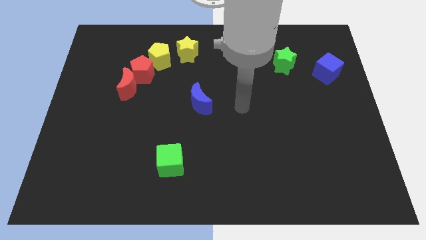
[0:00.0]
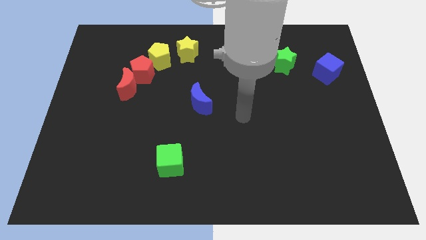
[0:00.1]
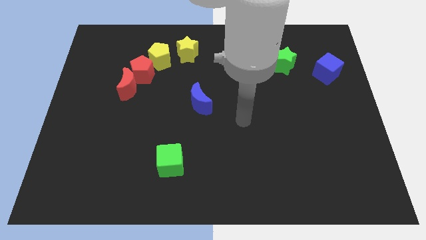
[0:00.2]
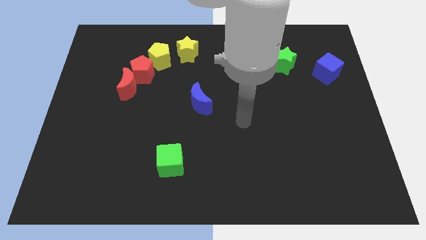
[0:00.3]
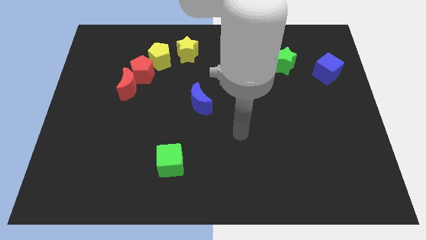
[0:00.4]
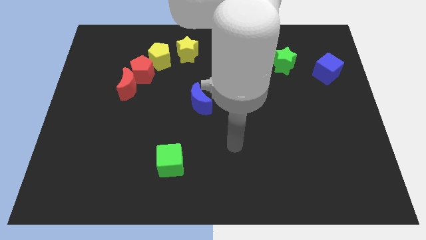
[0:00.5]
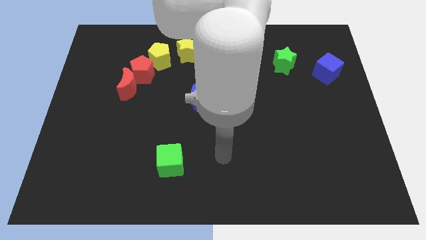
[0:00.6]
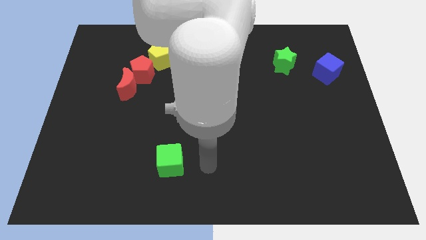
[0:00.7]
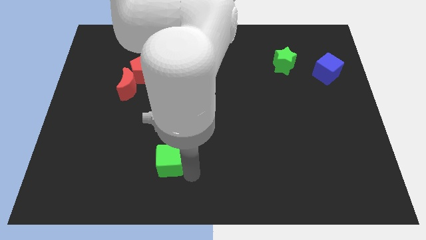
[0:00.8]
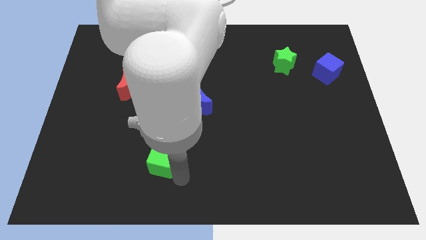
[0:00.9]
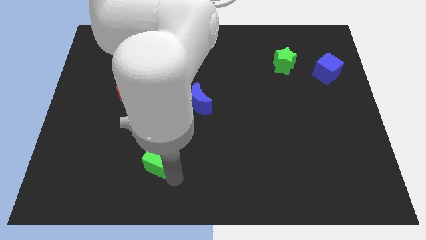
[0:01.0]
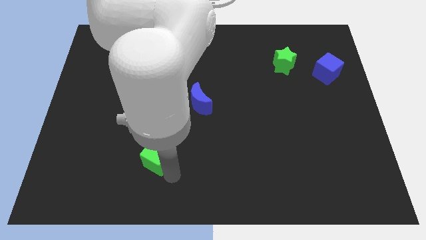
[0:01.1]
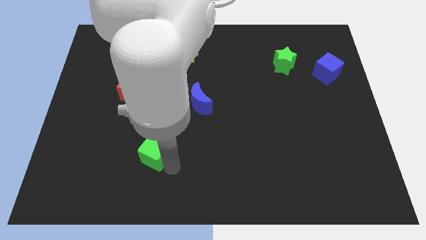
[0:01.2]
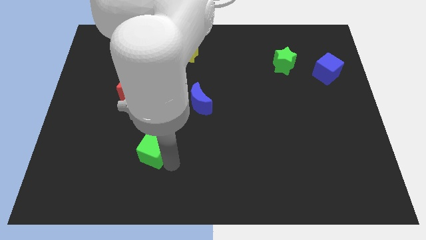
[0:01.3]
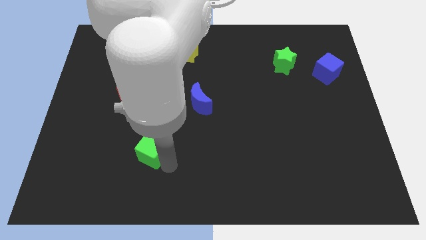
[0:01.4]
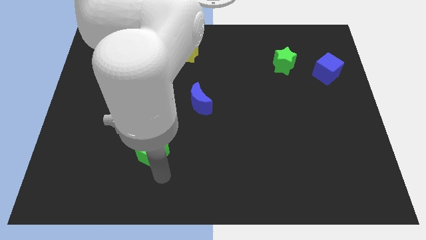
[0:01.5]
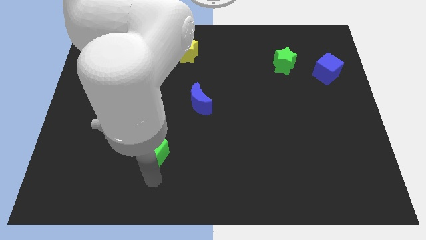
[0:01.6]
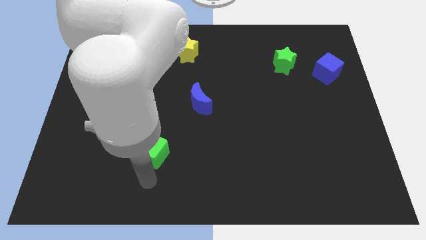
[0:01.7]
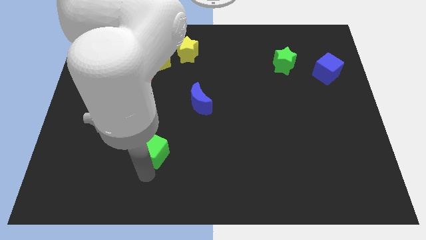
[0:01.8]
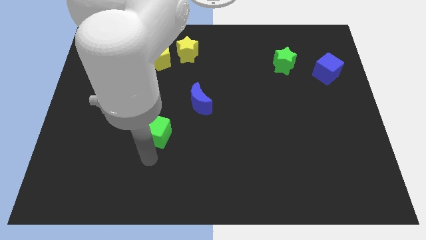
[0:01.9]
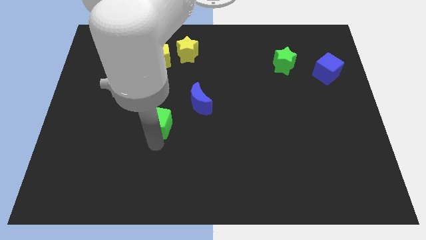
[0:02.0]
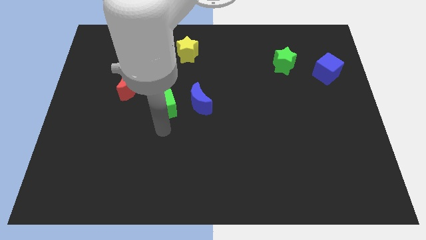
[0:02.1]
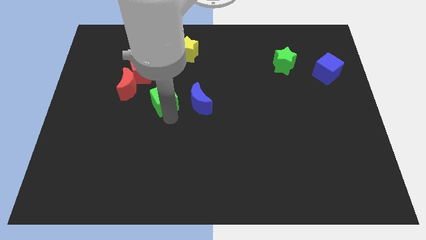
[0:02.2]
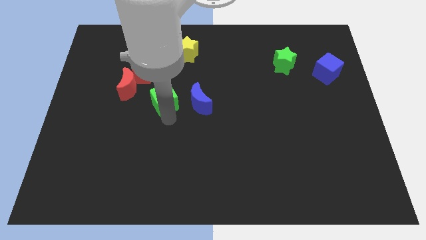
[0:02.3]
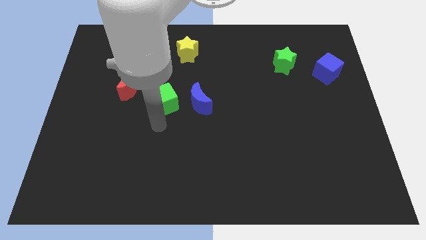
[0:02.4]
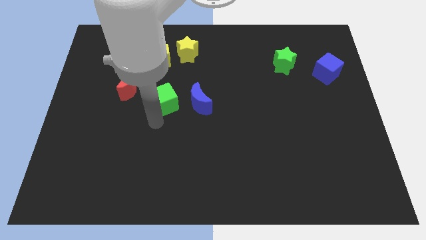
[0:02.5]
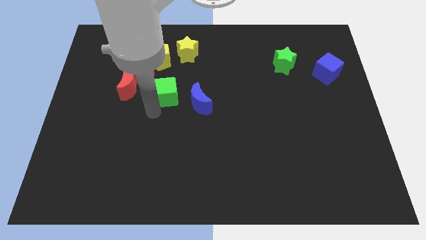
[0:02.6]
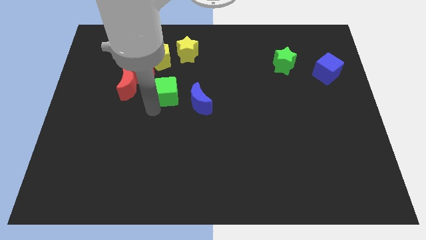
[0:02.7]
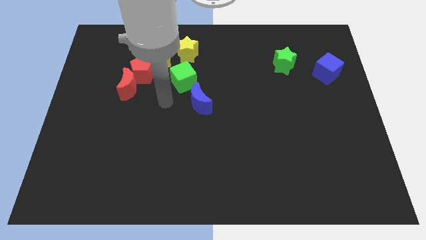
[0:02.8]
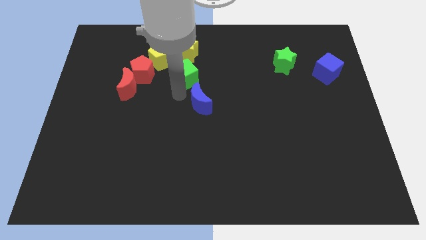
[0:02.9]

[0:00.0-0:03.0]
push the green cube below the yellow star

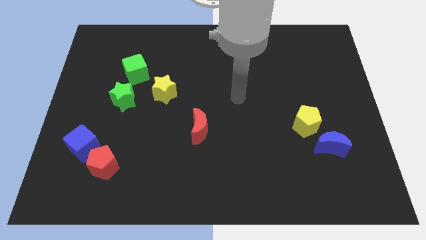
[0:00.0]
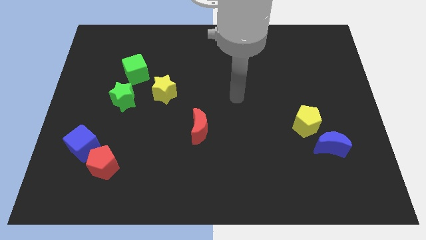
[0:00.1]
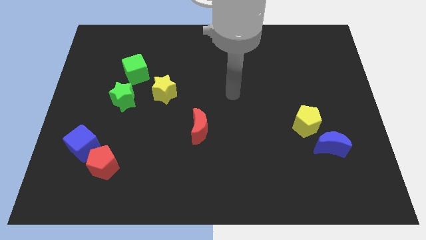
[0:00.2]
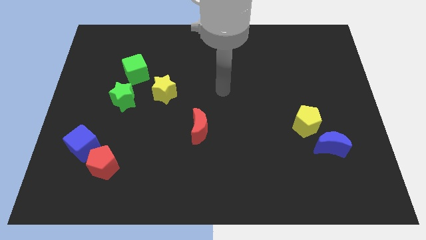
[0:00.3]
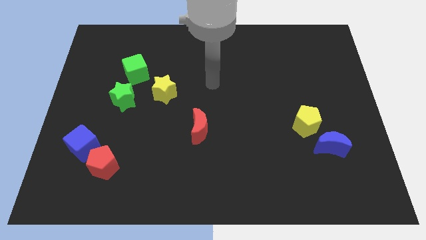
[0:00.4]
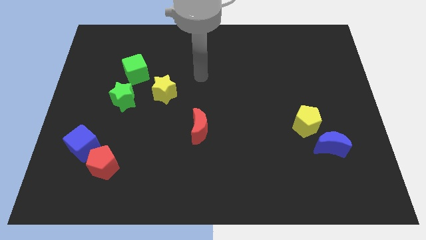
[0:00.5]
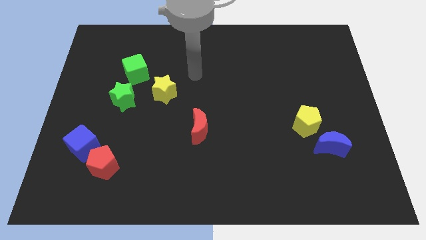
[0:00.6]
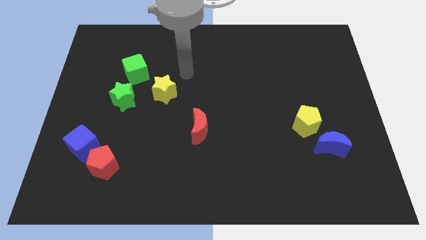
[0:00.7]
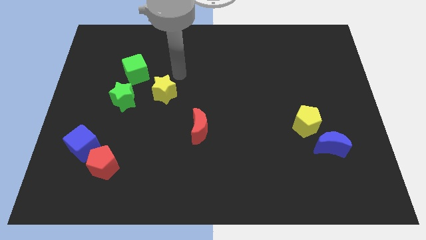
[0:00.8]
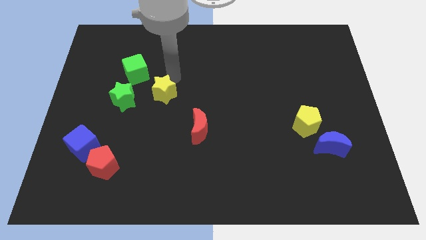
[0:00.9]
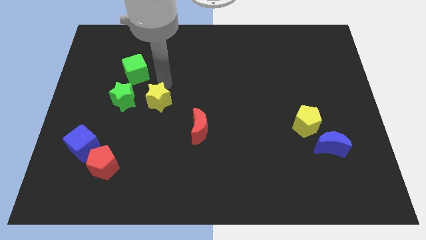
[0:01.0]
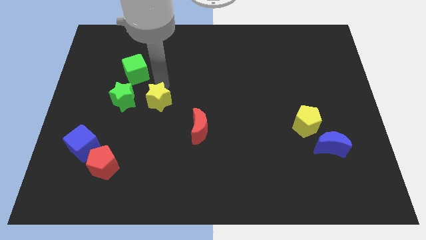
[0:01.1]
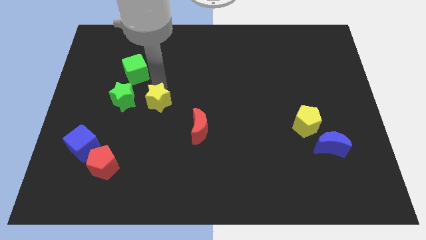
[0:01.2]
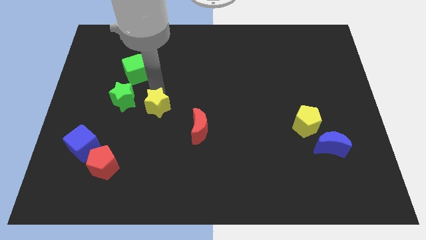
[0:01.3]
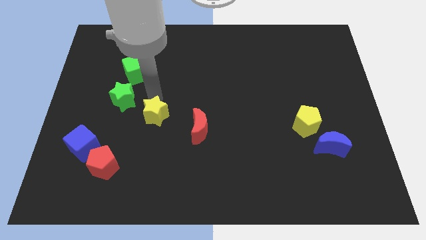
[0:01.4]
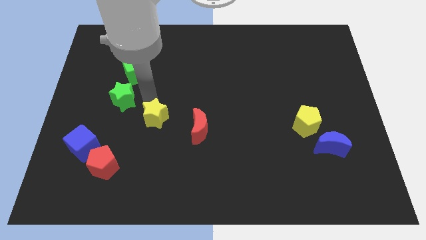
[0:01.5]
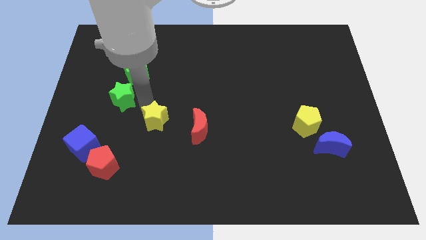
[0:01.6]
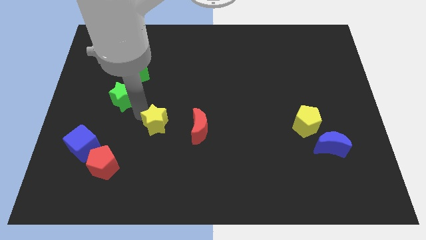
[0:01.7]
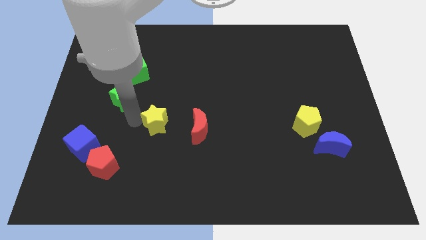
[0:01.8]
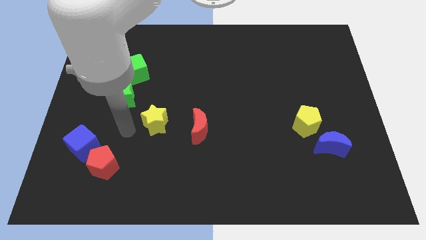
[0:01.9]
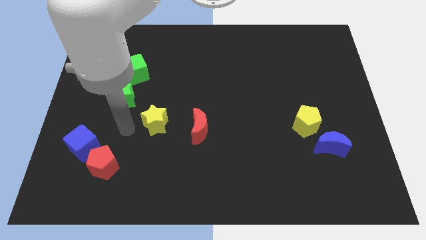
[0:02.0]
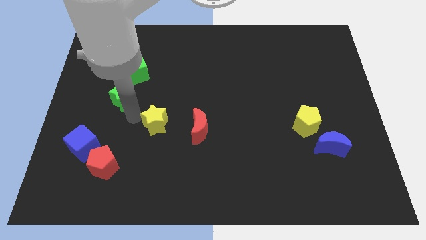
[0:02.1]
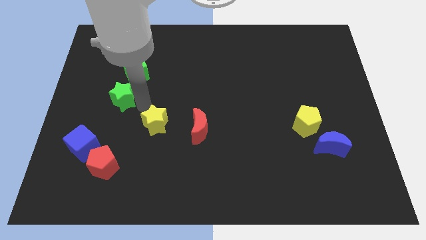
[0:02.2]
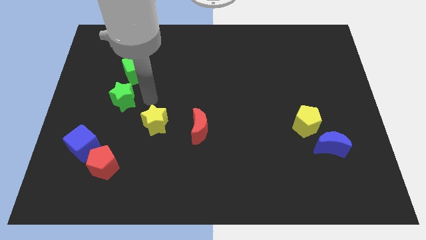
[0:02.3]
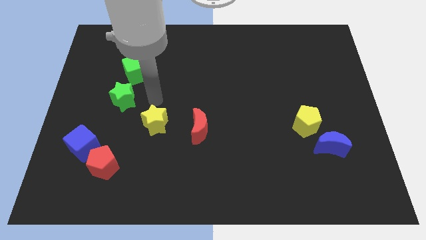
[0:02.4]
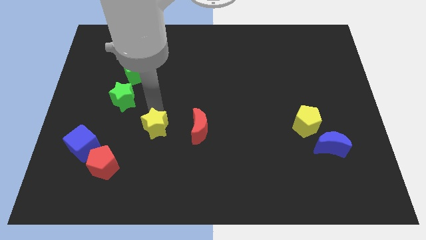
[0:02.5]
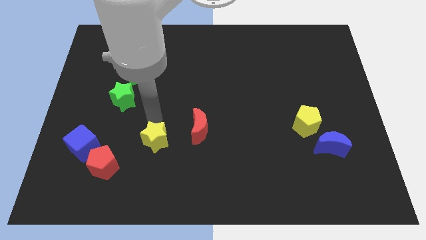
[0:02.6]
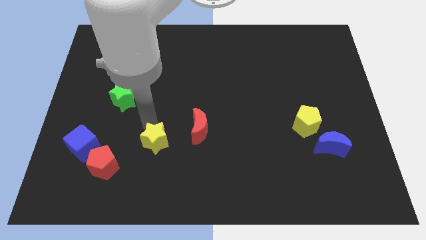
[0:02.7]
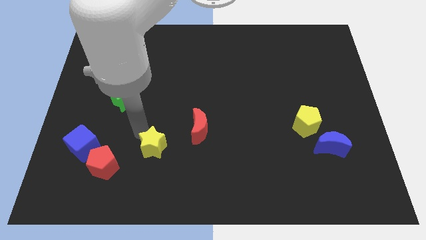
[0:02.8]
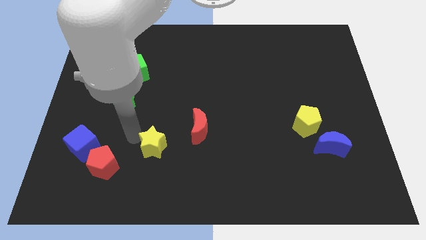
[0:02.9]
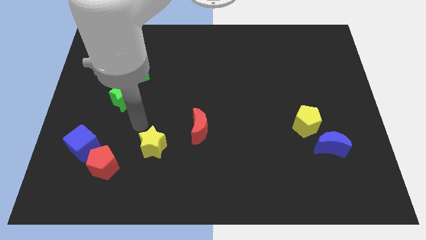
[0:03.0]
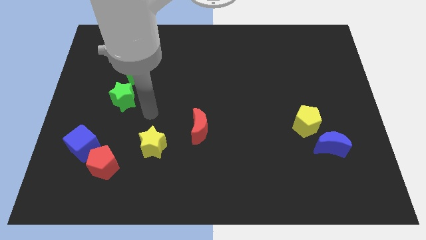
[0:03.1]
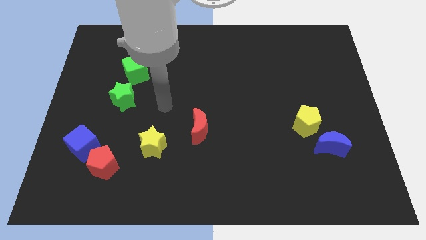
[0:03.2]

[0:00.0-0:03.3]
move the yellow star to the right of the blue cube

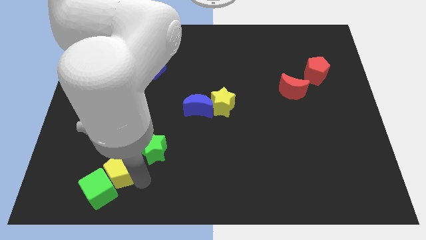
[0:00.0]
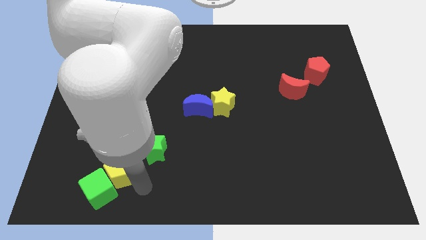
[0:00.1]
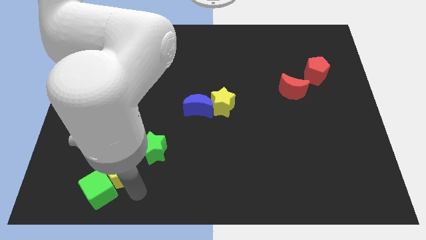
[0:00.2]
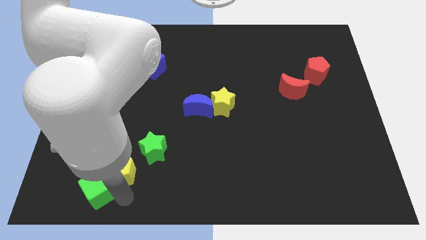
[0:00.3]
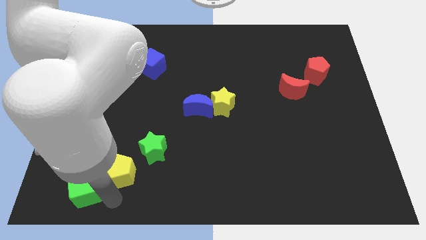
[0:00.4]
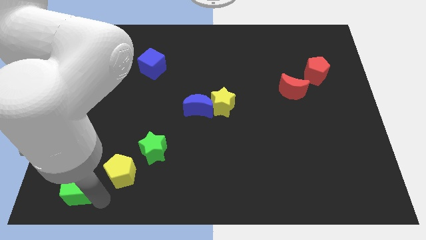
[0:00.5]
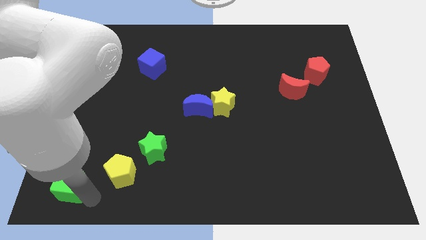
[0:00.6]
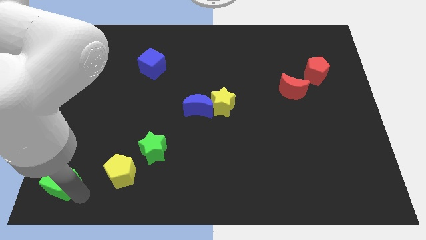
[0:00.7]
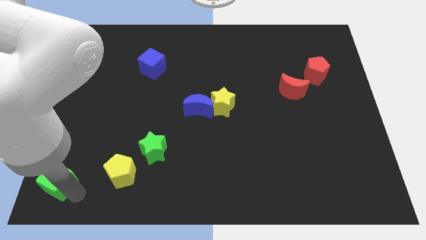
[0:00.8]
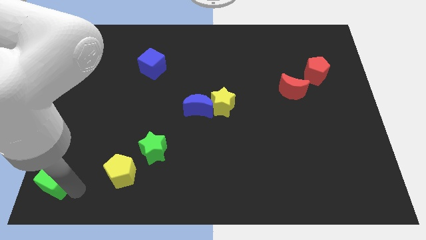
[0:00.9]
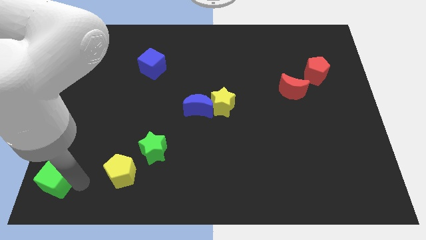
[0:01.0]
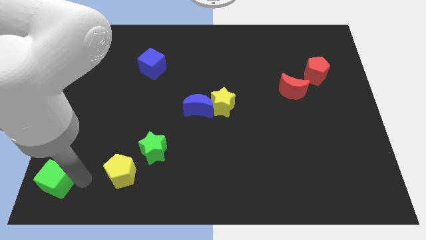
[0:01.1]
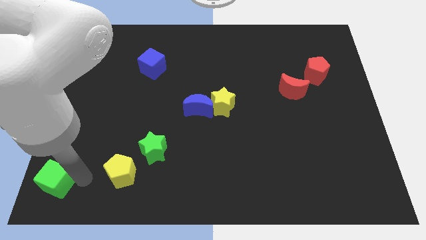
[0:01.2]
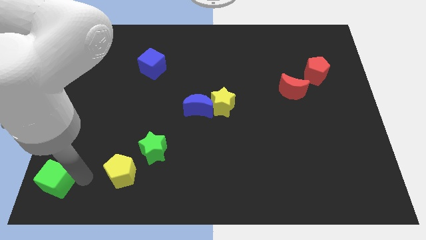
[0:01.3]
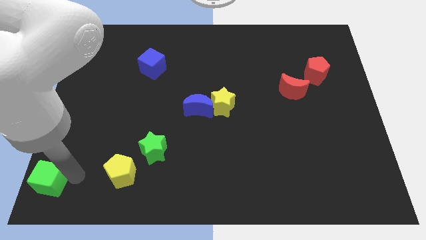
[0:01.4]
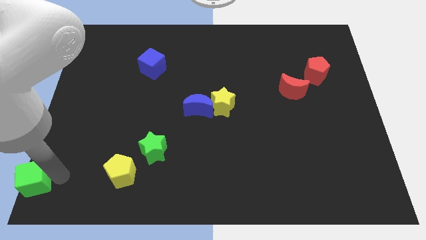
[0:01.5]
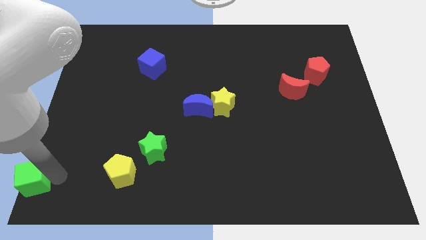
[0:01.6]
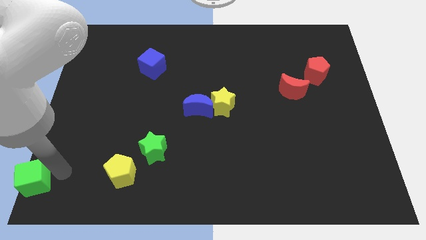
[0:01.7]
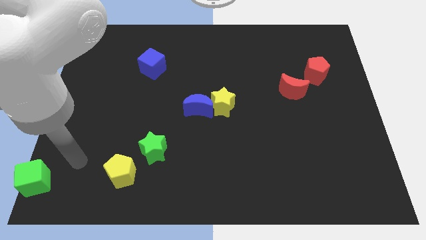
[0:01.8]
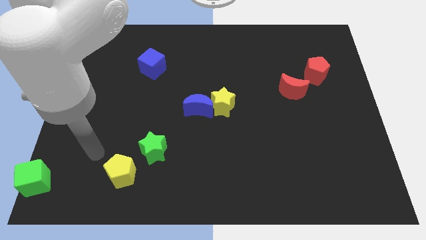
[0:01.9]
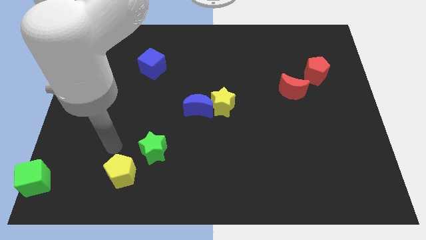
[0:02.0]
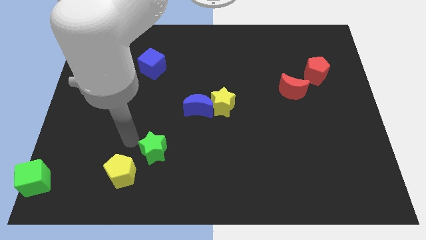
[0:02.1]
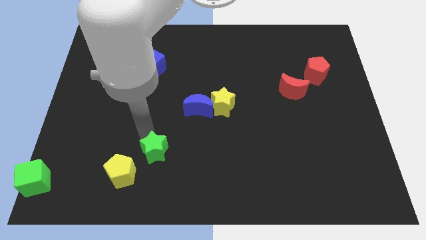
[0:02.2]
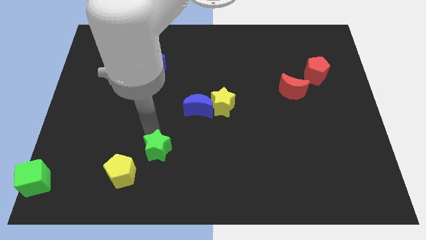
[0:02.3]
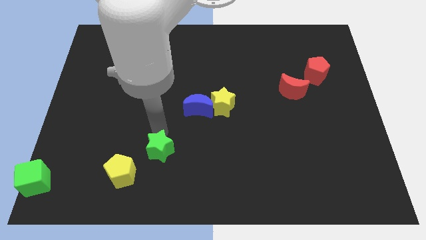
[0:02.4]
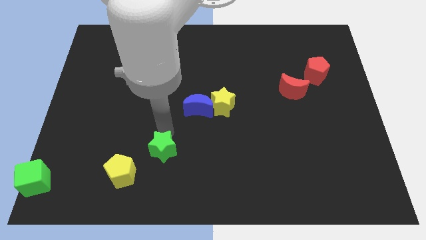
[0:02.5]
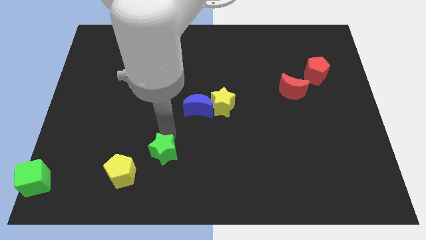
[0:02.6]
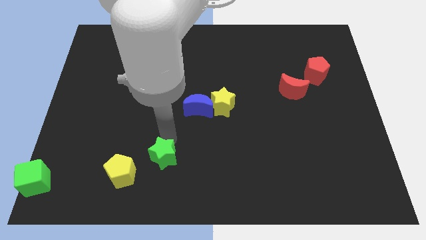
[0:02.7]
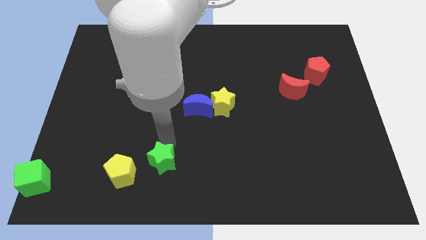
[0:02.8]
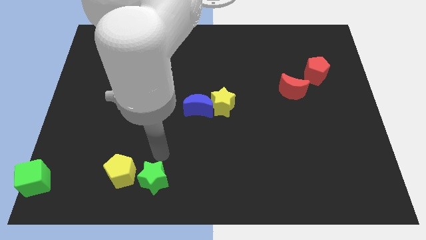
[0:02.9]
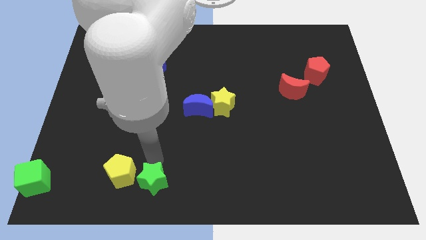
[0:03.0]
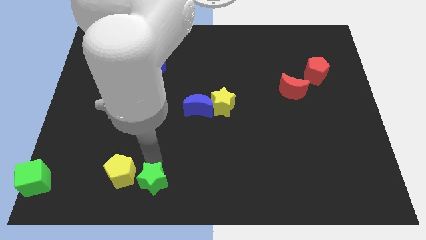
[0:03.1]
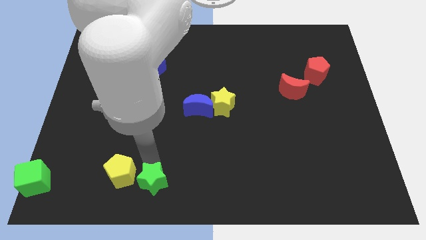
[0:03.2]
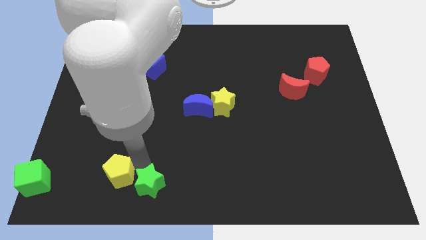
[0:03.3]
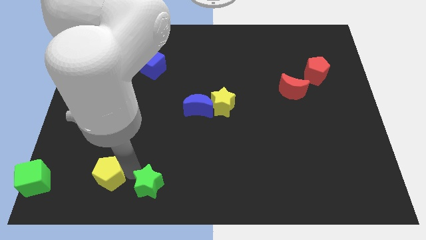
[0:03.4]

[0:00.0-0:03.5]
push the green blocks towards the bottom left side of the board
